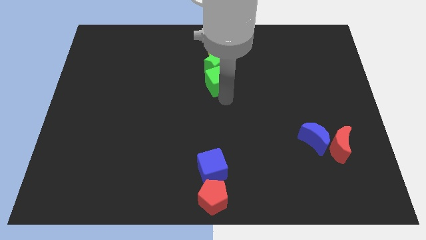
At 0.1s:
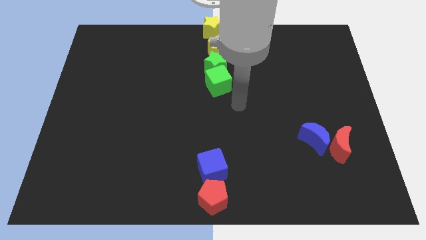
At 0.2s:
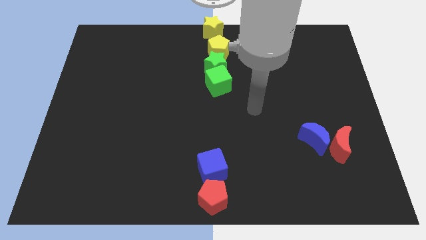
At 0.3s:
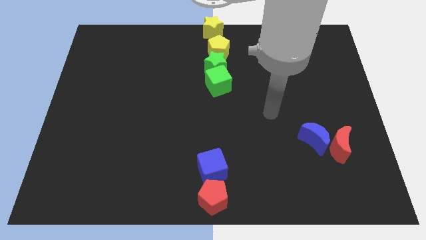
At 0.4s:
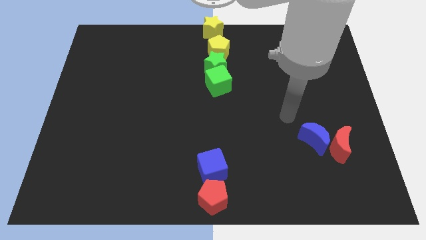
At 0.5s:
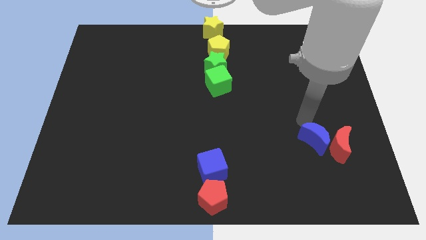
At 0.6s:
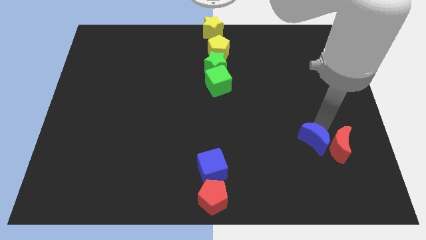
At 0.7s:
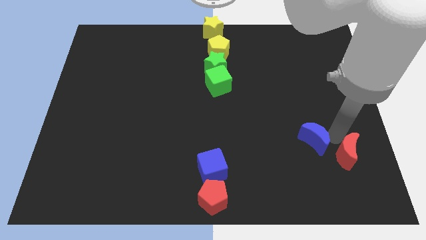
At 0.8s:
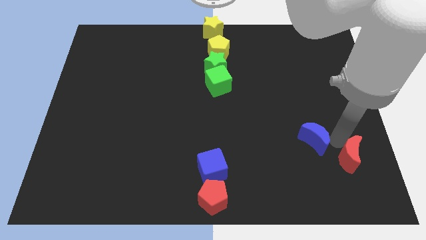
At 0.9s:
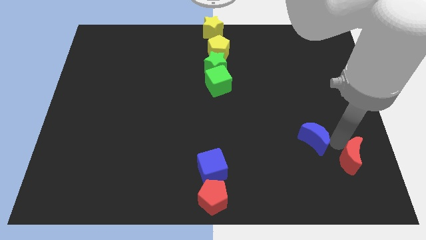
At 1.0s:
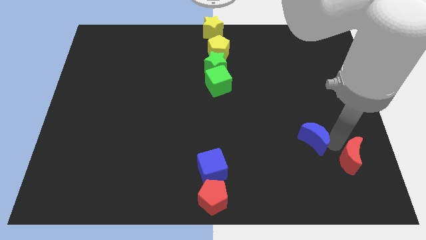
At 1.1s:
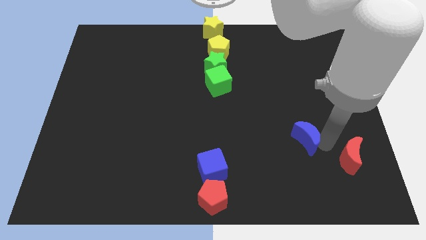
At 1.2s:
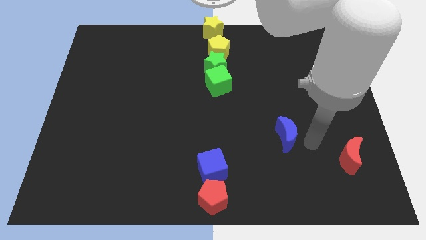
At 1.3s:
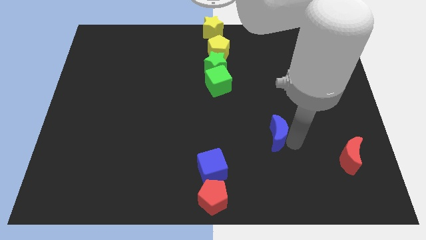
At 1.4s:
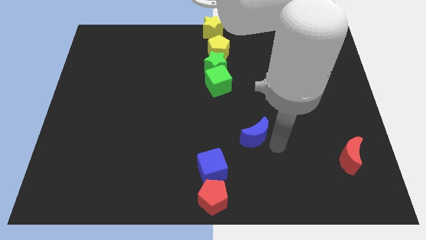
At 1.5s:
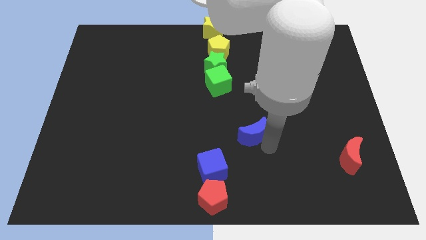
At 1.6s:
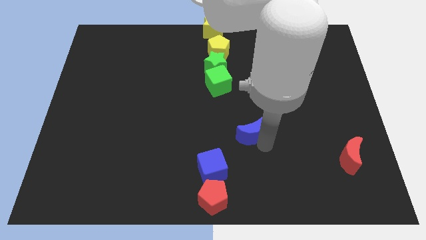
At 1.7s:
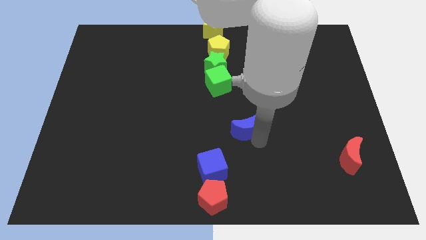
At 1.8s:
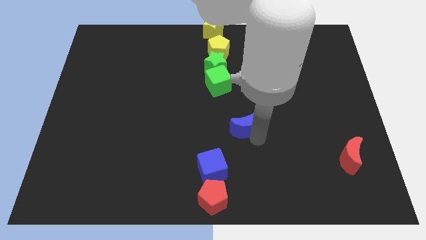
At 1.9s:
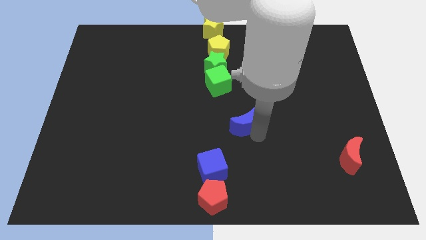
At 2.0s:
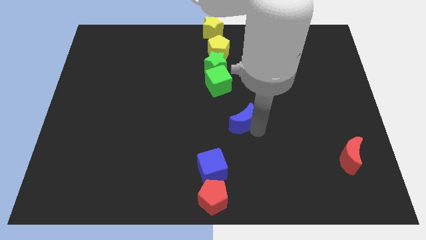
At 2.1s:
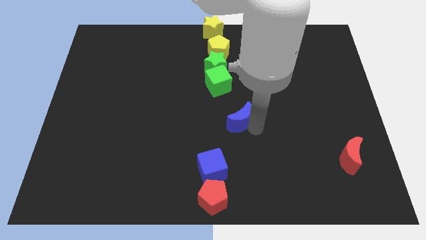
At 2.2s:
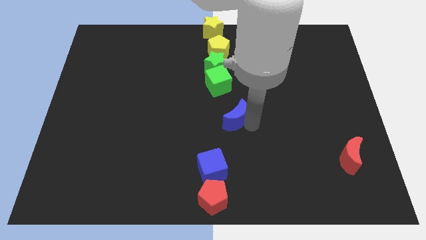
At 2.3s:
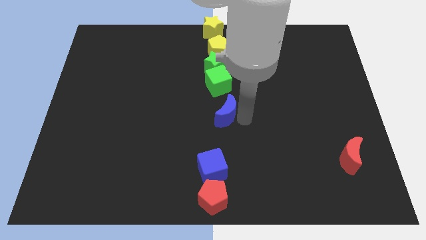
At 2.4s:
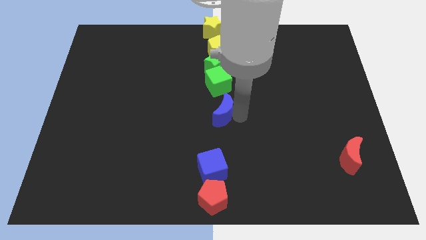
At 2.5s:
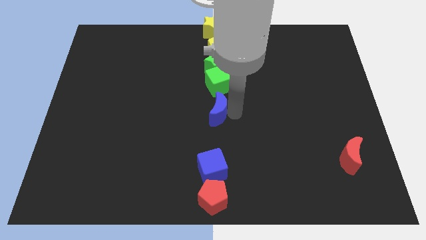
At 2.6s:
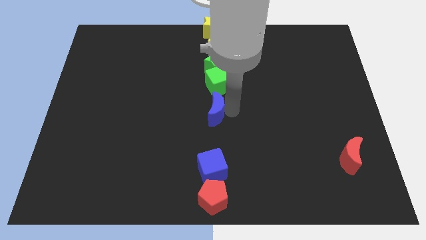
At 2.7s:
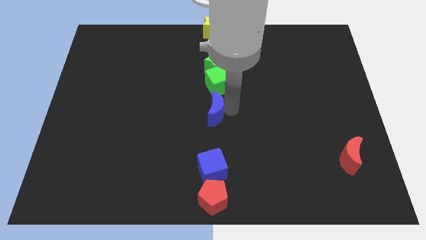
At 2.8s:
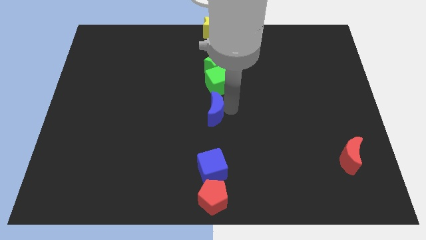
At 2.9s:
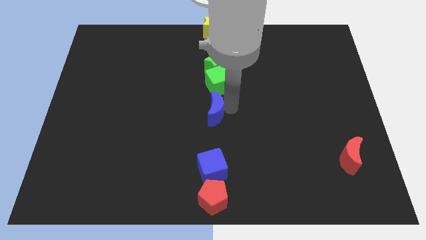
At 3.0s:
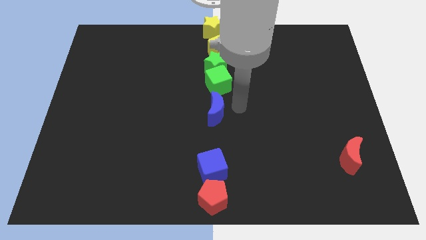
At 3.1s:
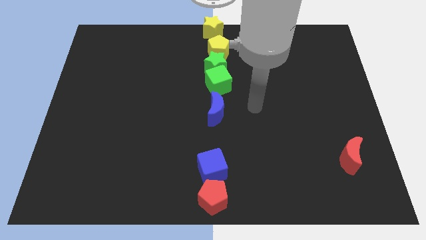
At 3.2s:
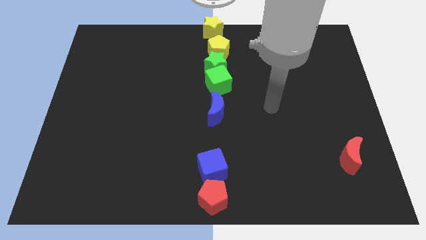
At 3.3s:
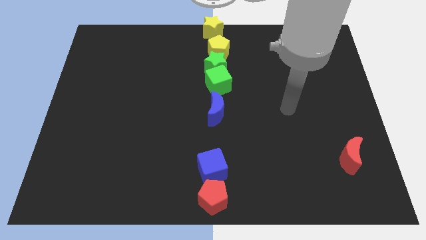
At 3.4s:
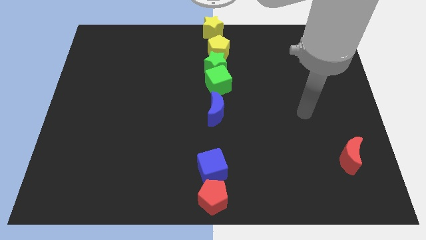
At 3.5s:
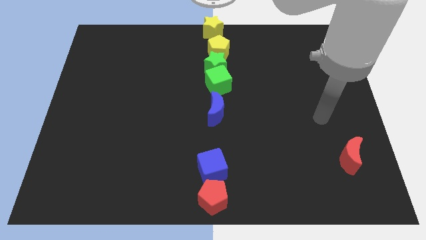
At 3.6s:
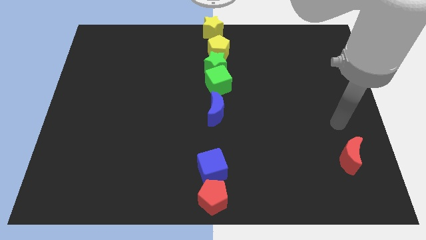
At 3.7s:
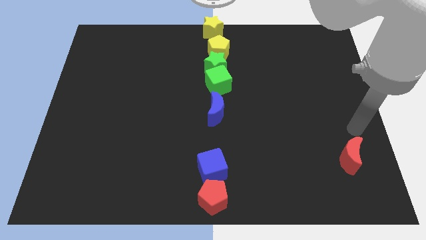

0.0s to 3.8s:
move the blue crescent to the bottom of the green cube

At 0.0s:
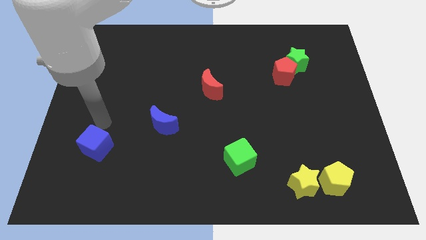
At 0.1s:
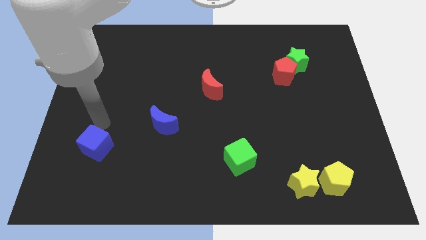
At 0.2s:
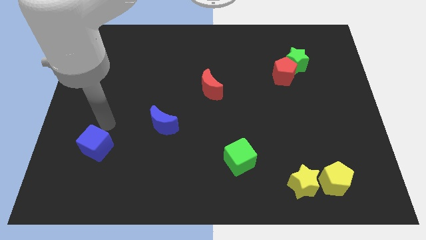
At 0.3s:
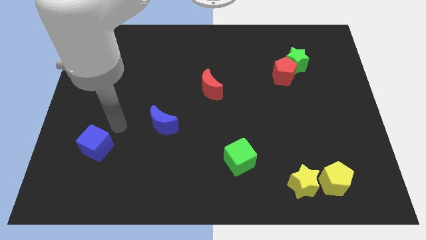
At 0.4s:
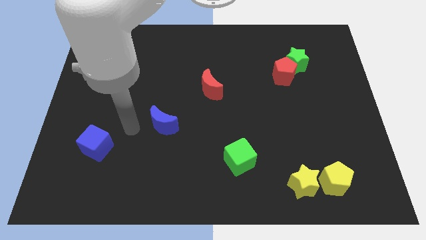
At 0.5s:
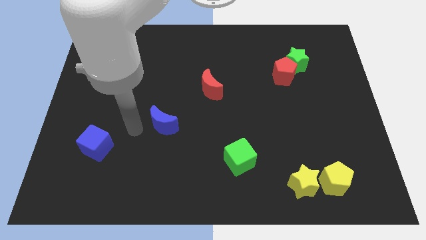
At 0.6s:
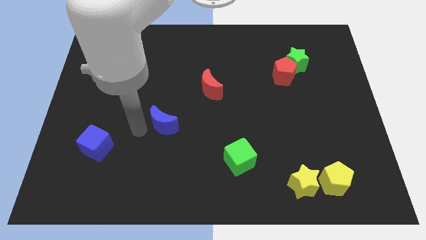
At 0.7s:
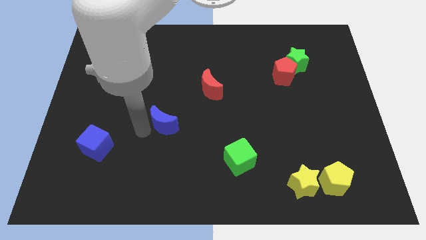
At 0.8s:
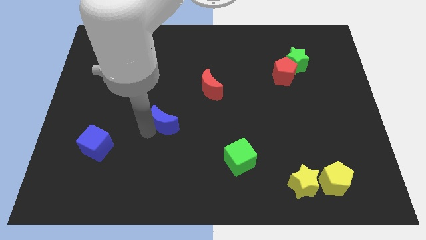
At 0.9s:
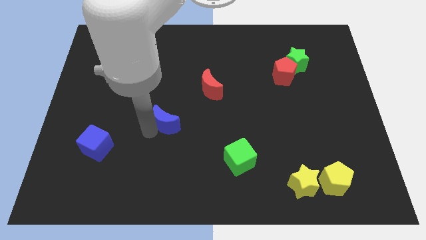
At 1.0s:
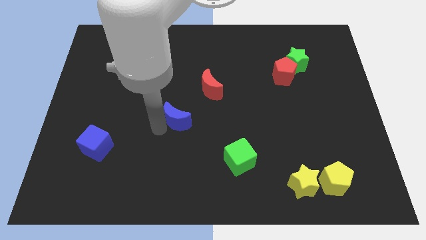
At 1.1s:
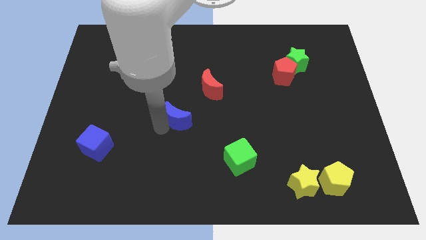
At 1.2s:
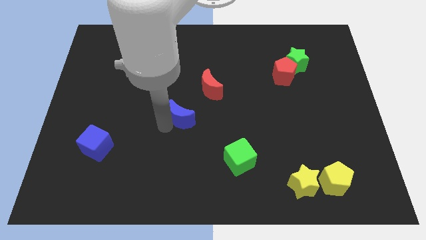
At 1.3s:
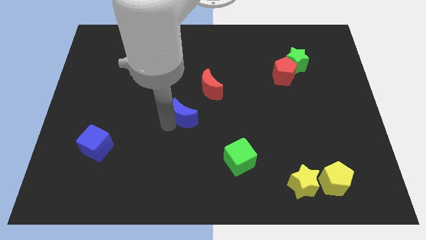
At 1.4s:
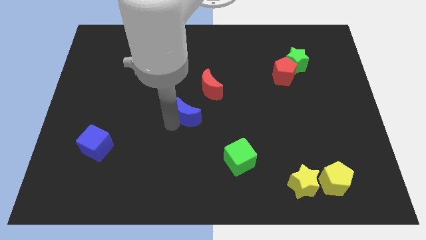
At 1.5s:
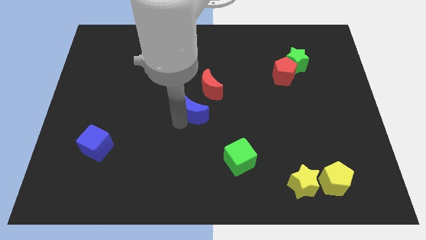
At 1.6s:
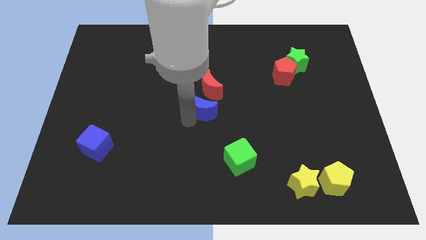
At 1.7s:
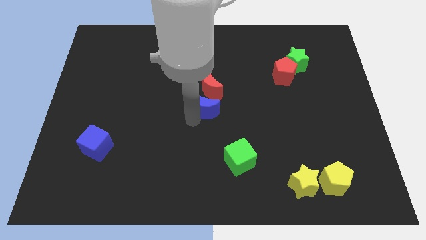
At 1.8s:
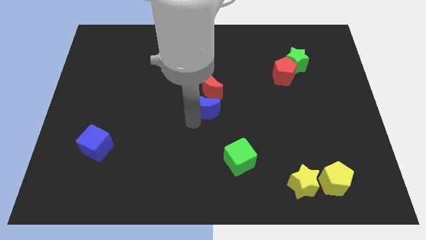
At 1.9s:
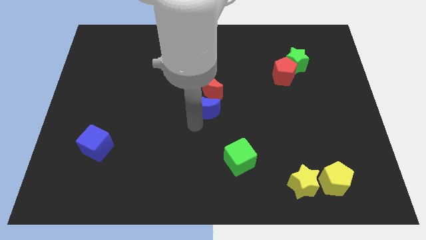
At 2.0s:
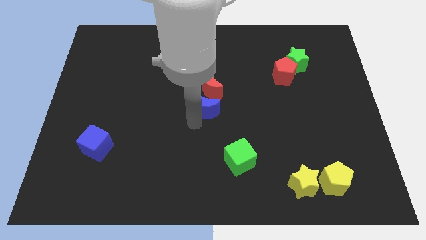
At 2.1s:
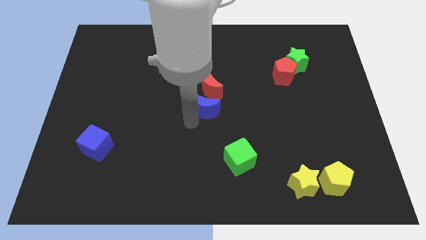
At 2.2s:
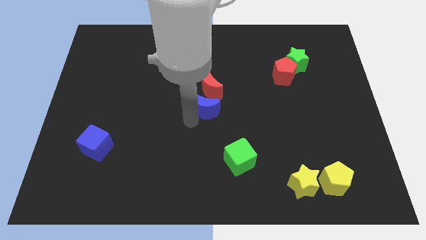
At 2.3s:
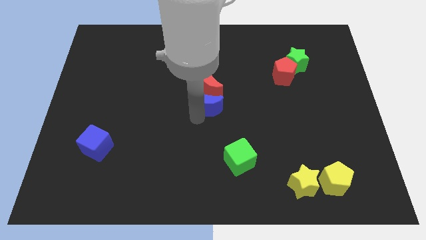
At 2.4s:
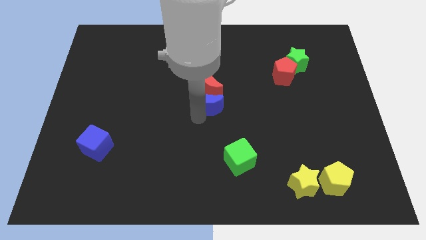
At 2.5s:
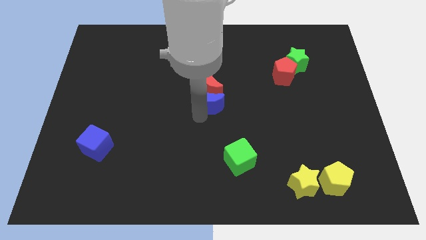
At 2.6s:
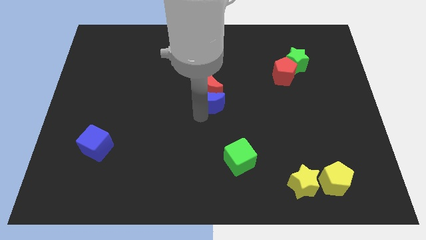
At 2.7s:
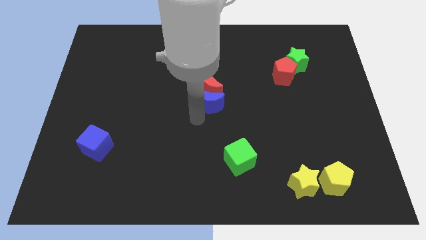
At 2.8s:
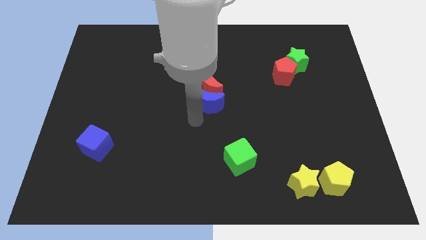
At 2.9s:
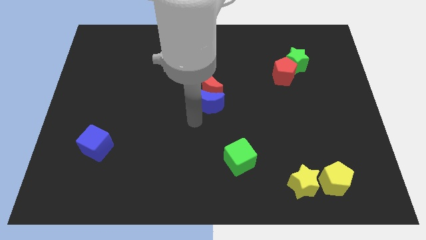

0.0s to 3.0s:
move the blue crescent to the center of the board

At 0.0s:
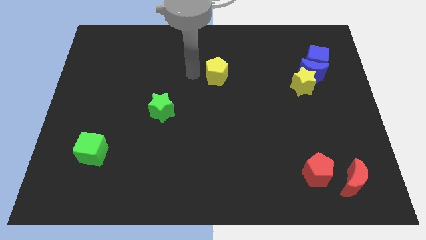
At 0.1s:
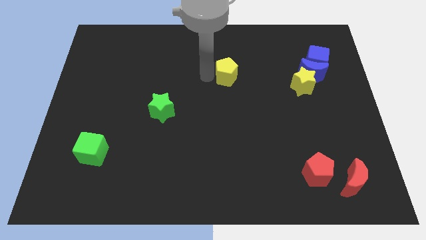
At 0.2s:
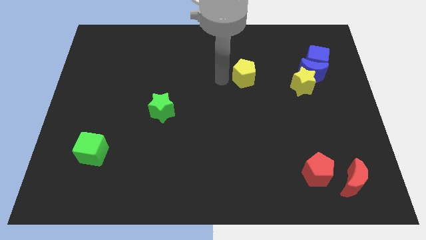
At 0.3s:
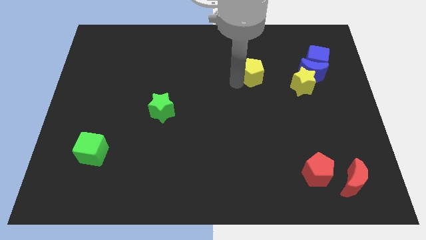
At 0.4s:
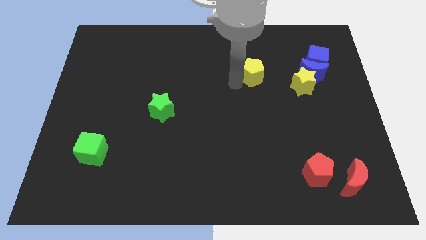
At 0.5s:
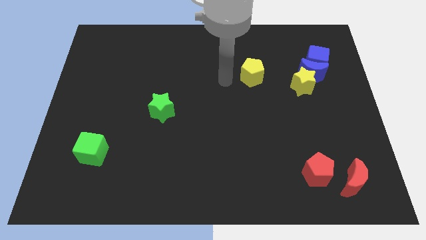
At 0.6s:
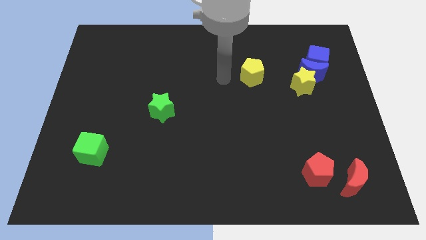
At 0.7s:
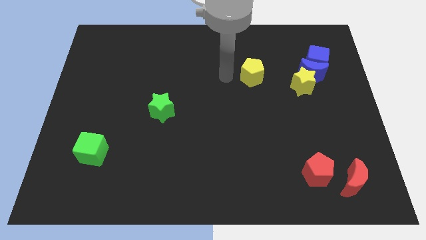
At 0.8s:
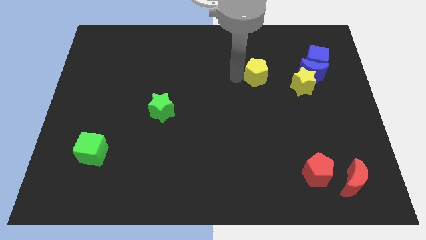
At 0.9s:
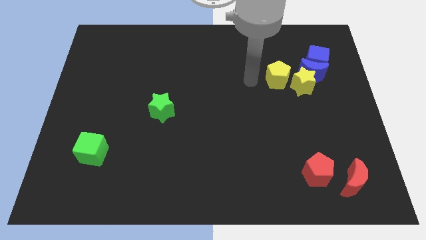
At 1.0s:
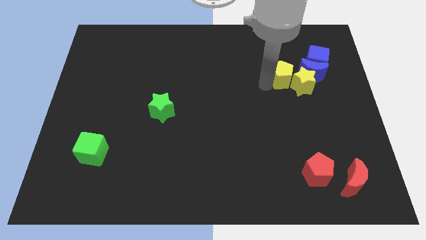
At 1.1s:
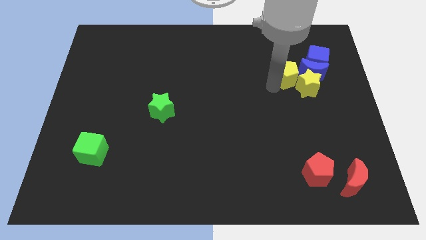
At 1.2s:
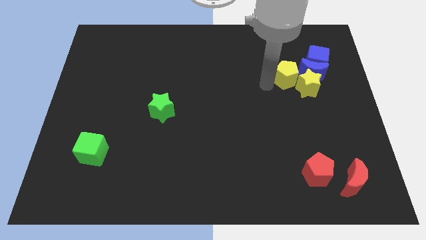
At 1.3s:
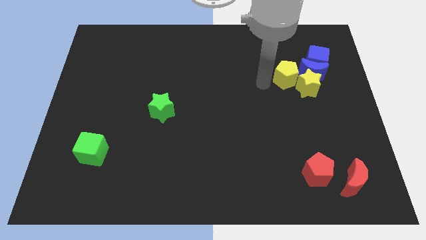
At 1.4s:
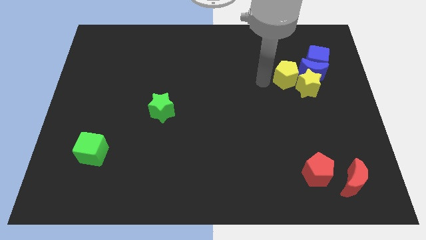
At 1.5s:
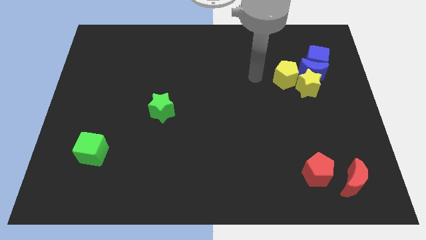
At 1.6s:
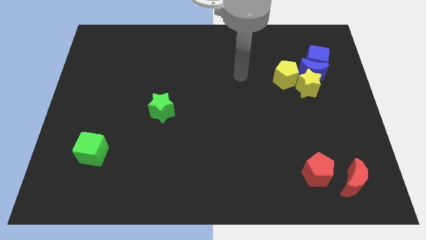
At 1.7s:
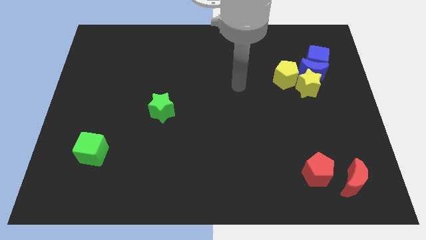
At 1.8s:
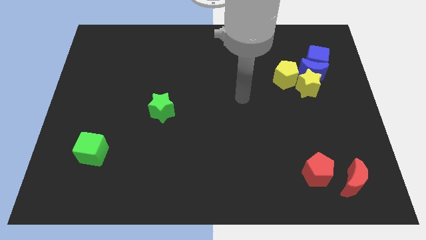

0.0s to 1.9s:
put the yellow pentagon into the yellow star

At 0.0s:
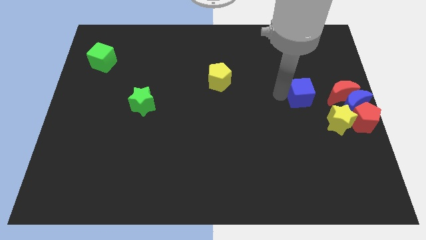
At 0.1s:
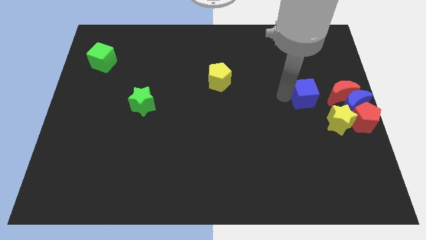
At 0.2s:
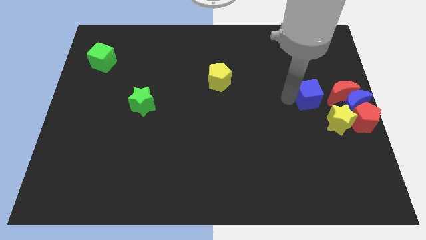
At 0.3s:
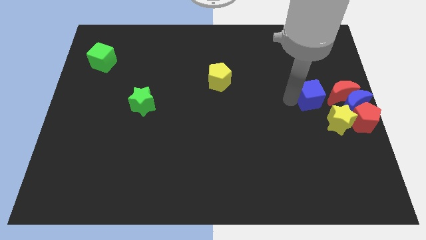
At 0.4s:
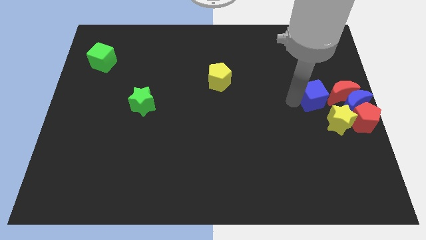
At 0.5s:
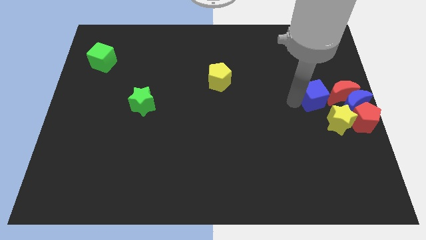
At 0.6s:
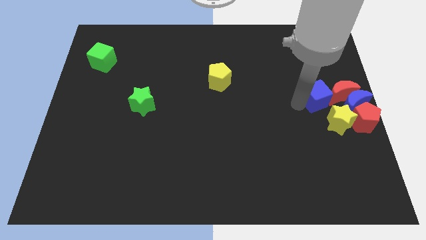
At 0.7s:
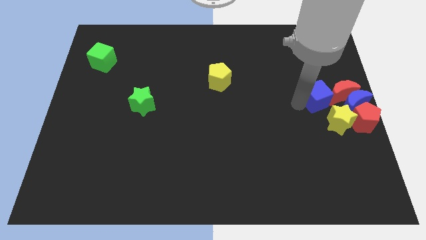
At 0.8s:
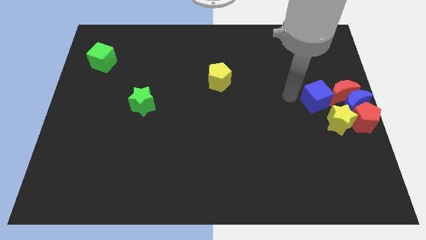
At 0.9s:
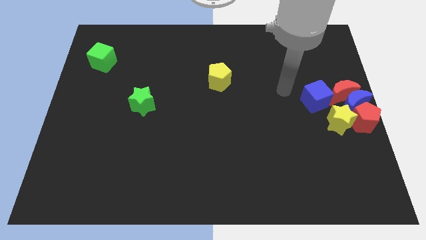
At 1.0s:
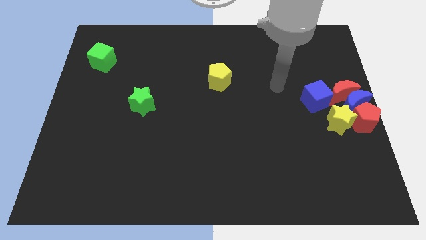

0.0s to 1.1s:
move the blue cube close to the red moon
